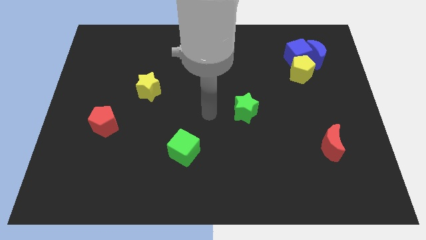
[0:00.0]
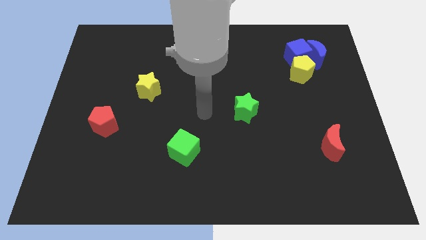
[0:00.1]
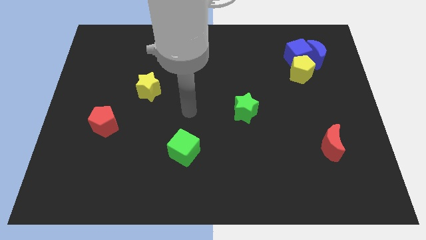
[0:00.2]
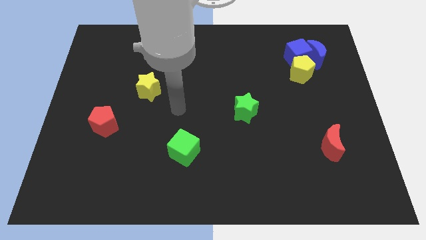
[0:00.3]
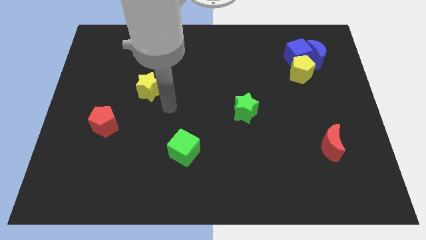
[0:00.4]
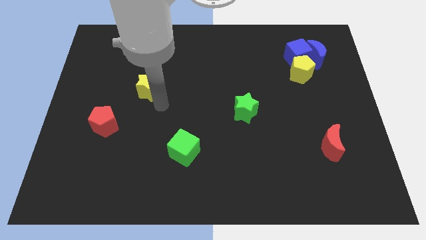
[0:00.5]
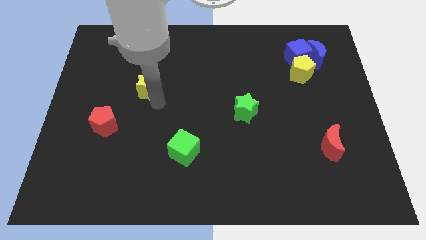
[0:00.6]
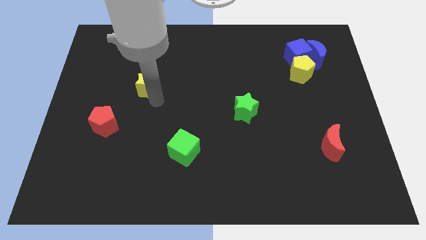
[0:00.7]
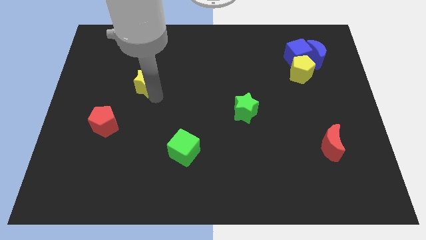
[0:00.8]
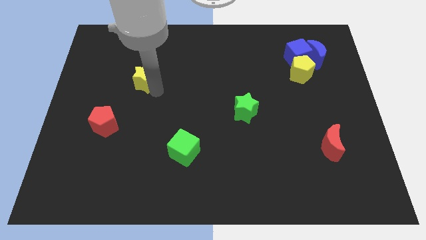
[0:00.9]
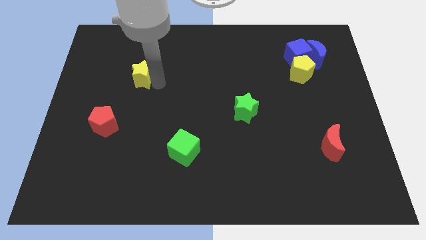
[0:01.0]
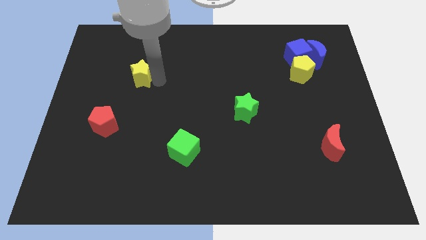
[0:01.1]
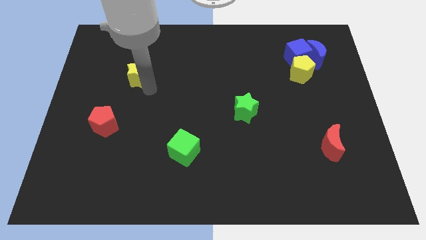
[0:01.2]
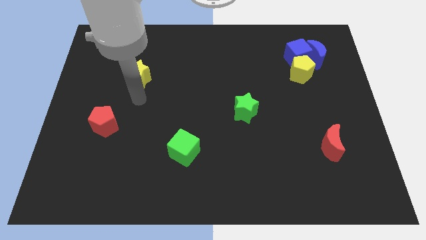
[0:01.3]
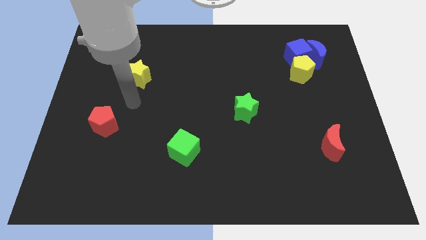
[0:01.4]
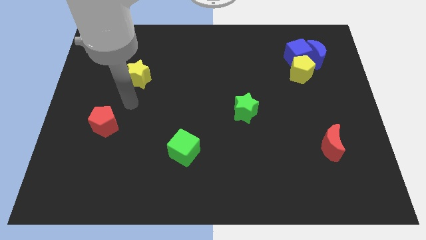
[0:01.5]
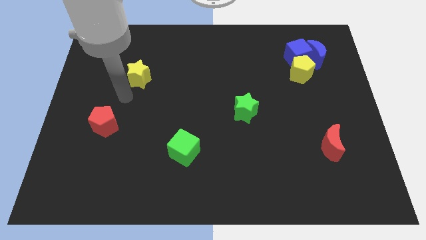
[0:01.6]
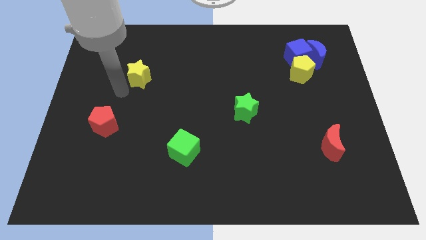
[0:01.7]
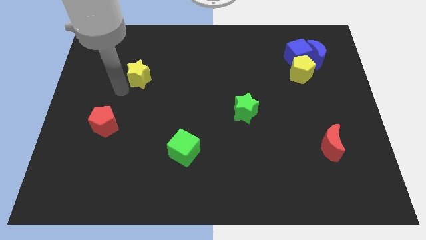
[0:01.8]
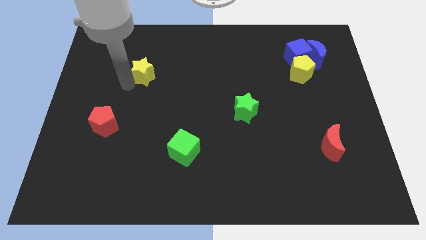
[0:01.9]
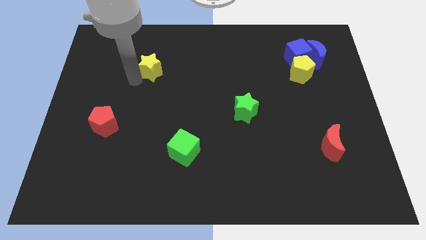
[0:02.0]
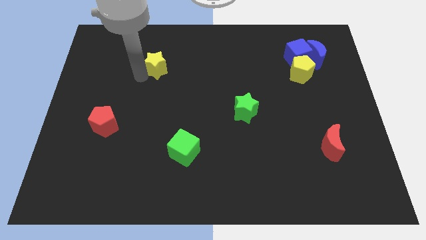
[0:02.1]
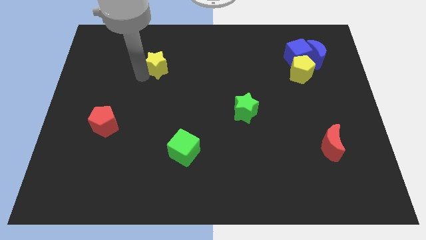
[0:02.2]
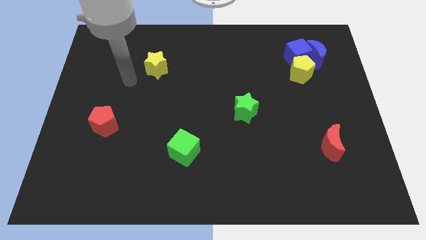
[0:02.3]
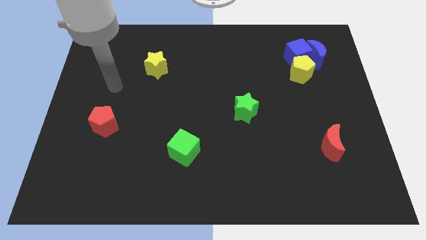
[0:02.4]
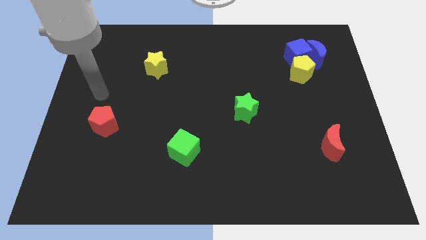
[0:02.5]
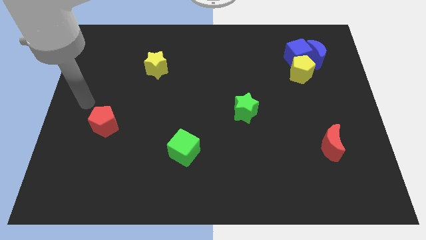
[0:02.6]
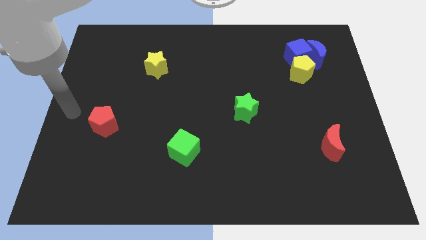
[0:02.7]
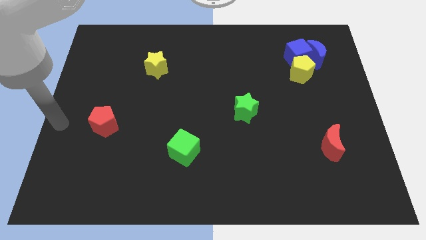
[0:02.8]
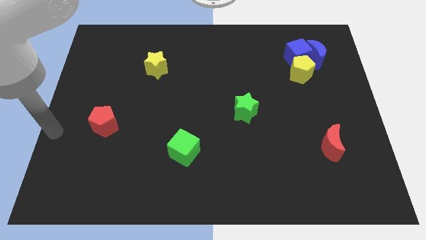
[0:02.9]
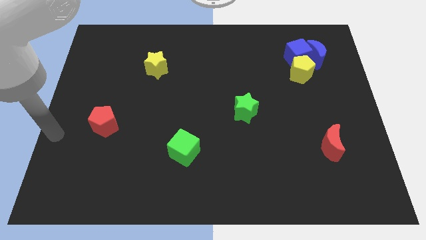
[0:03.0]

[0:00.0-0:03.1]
push the yellow star to the top of the green cube

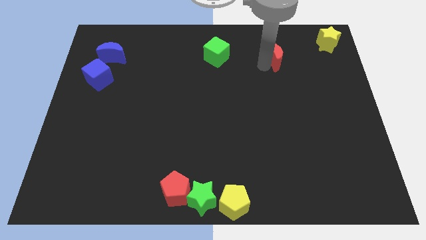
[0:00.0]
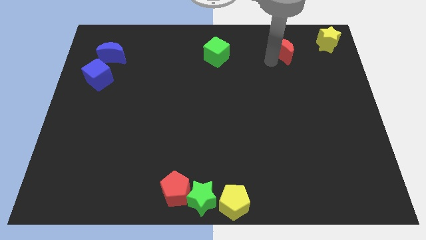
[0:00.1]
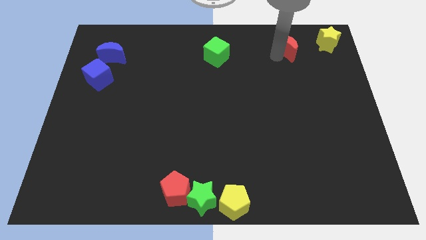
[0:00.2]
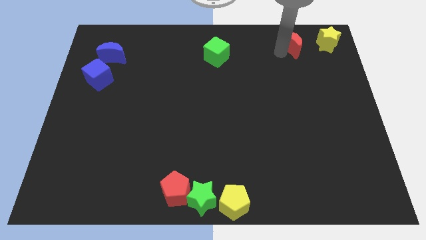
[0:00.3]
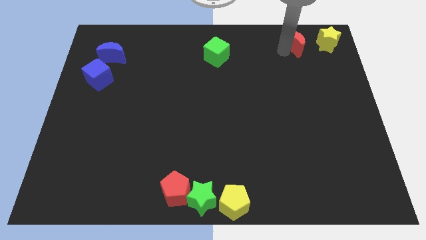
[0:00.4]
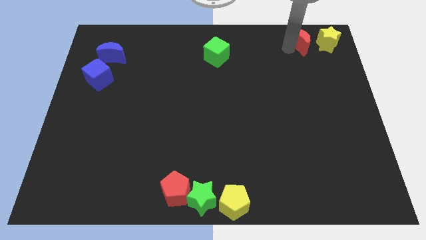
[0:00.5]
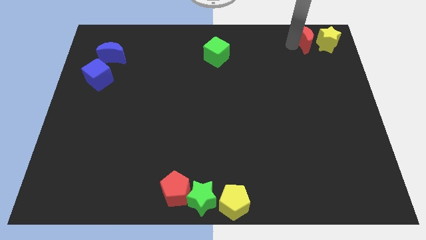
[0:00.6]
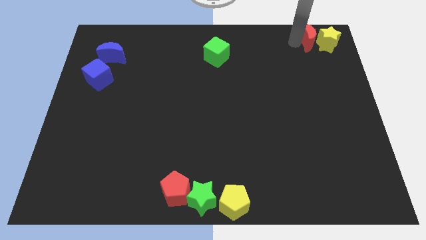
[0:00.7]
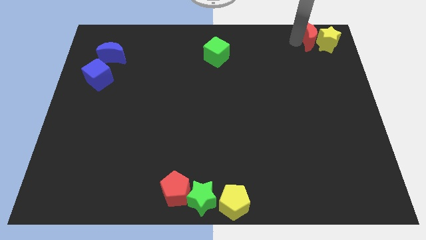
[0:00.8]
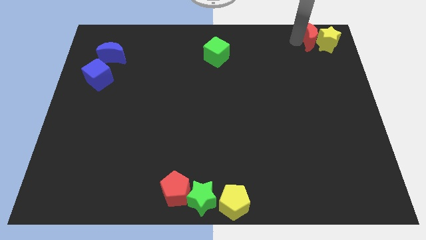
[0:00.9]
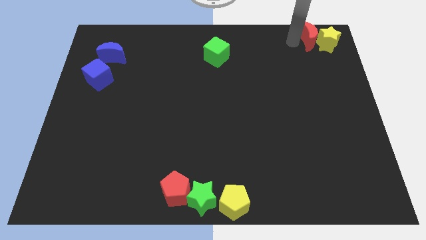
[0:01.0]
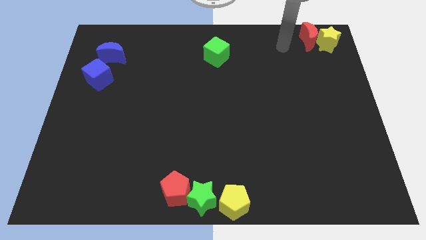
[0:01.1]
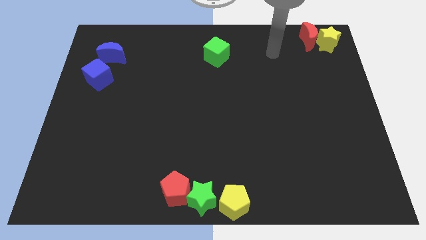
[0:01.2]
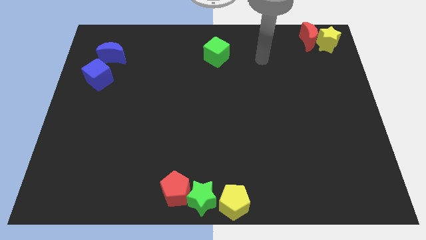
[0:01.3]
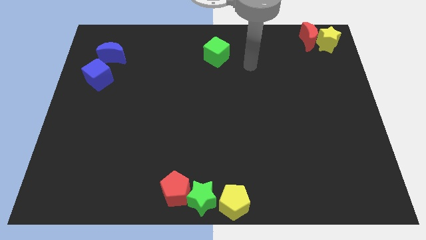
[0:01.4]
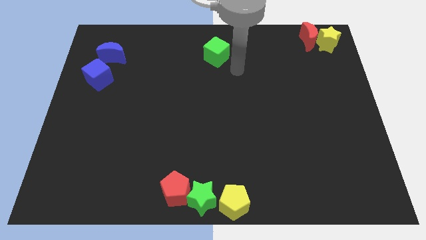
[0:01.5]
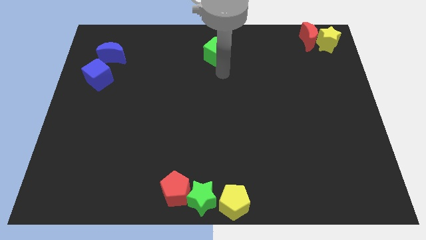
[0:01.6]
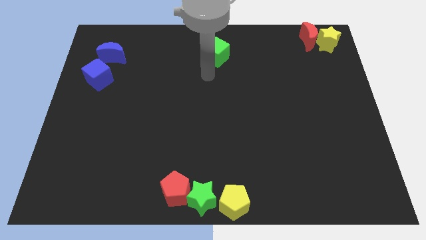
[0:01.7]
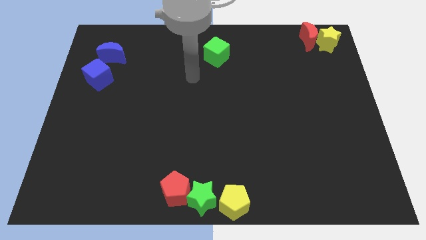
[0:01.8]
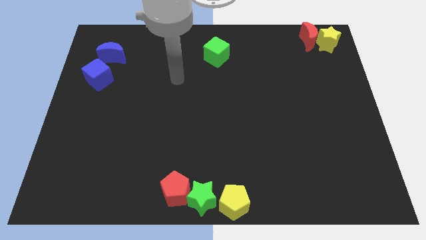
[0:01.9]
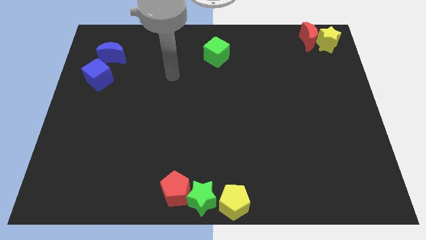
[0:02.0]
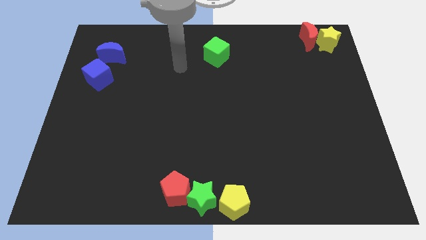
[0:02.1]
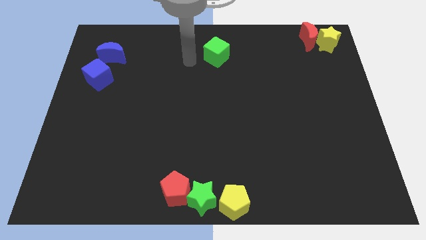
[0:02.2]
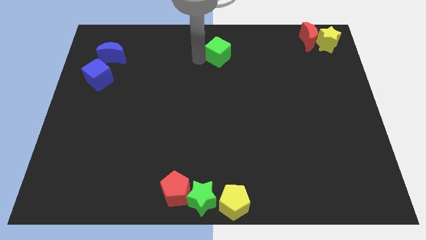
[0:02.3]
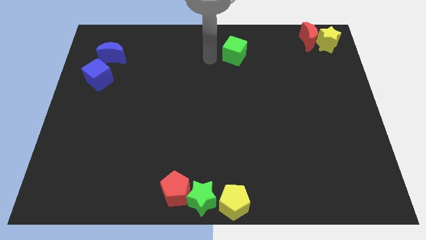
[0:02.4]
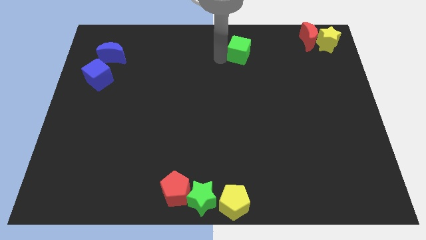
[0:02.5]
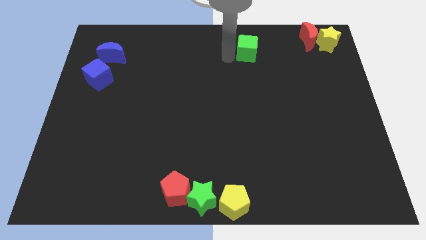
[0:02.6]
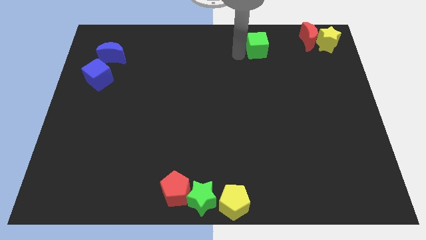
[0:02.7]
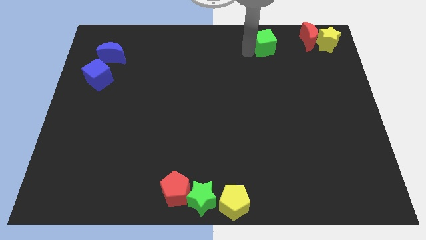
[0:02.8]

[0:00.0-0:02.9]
move the red moon close to the yellow star

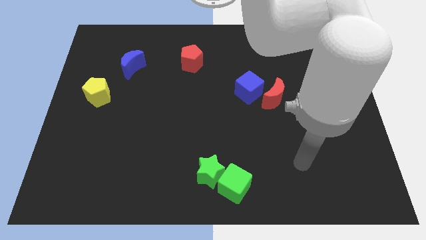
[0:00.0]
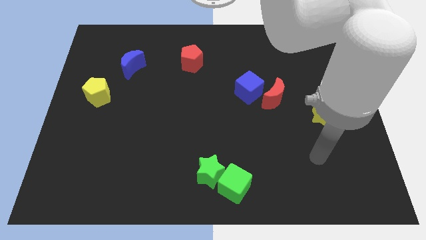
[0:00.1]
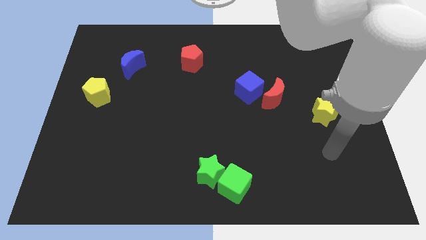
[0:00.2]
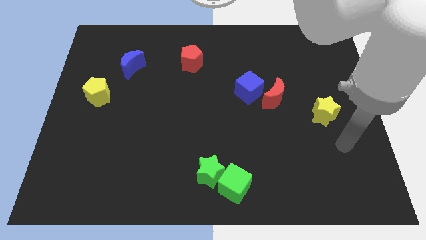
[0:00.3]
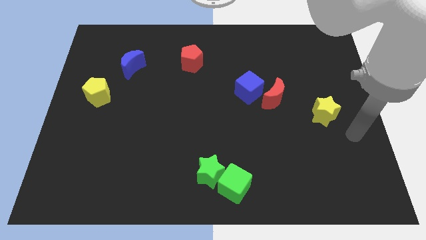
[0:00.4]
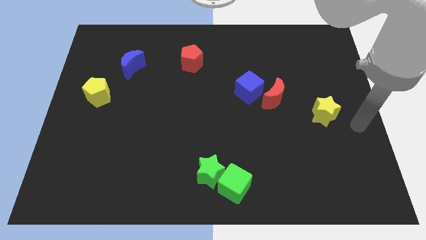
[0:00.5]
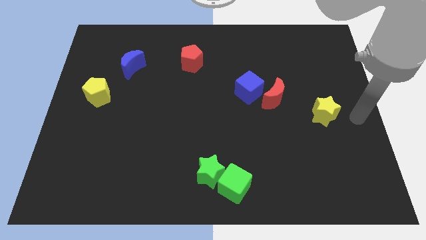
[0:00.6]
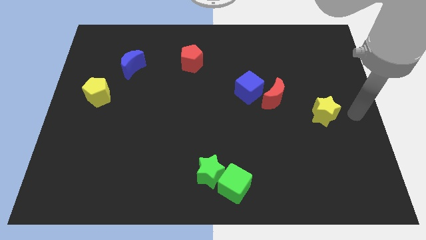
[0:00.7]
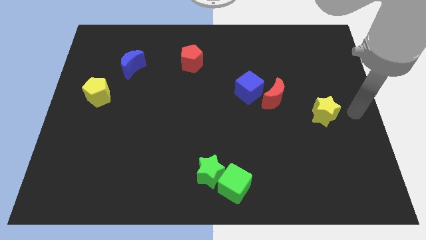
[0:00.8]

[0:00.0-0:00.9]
move the arm right to the yellow star

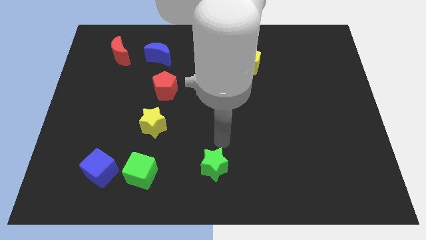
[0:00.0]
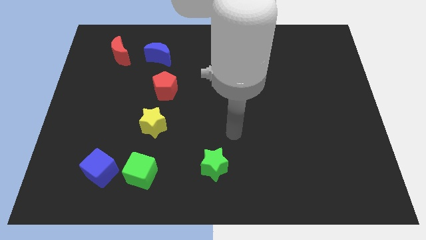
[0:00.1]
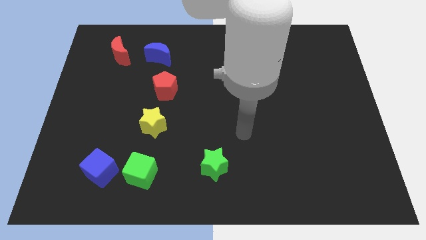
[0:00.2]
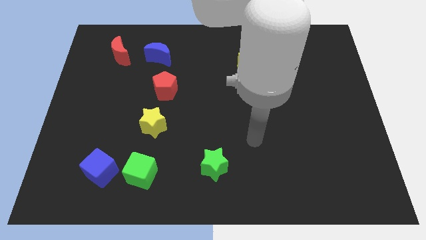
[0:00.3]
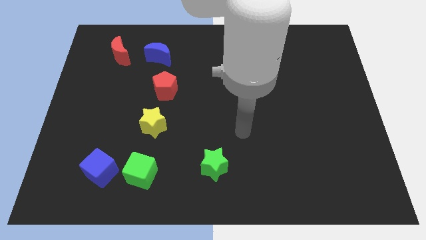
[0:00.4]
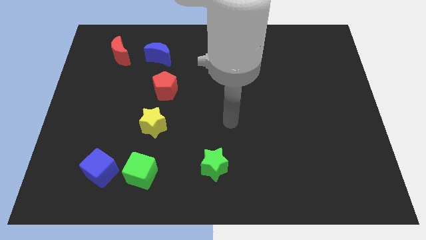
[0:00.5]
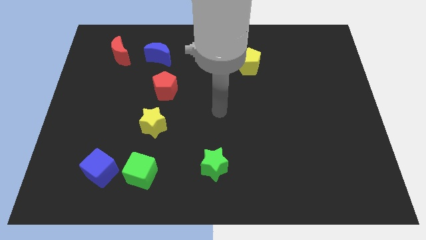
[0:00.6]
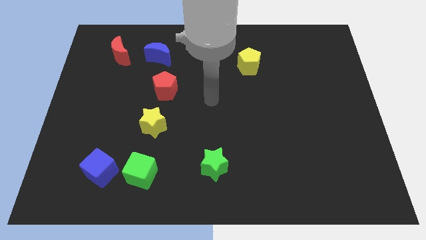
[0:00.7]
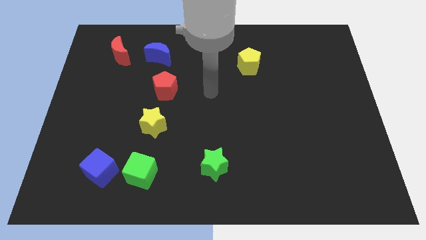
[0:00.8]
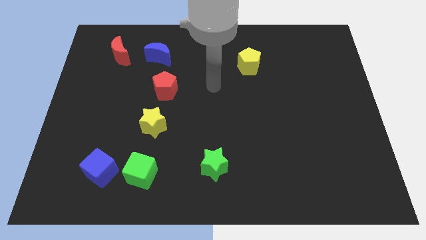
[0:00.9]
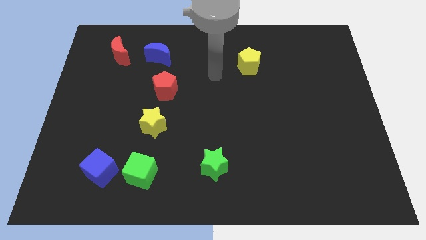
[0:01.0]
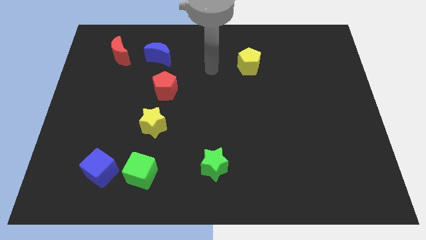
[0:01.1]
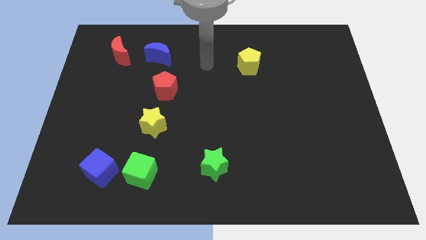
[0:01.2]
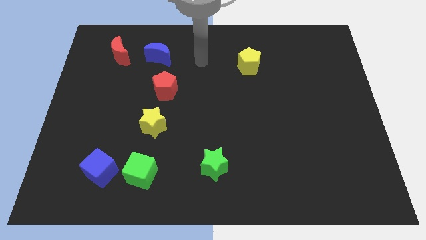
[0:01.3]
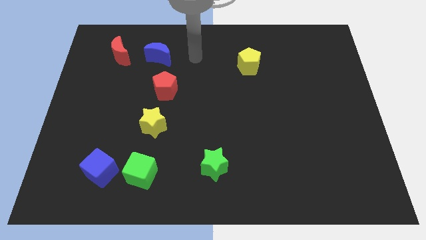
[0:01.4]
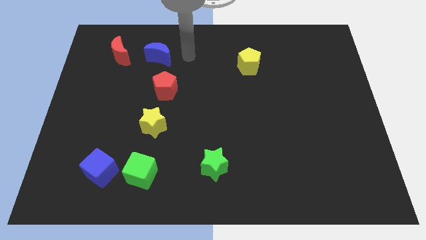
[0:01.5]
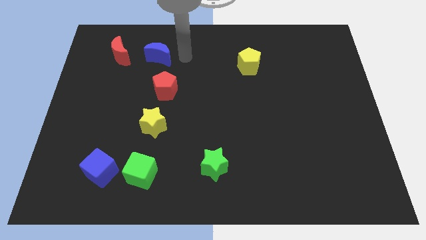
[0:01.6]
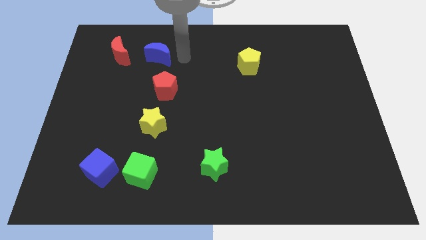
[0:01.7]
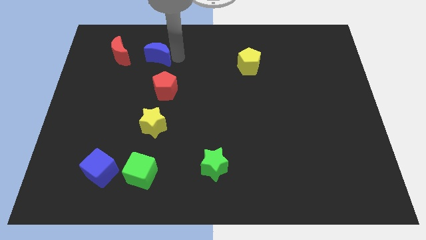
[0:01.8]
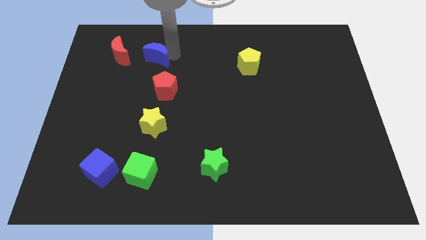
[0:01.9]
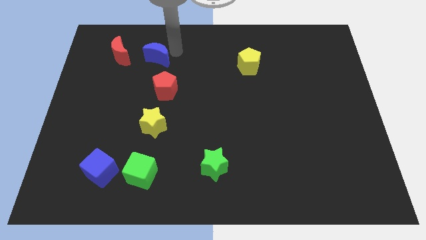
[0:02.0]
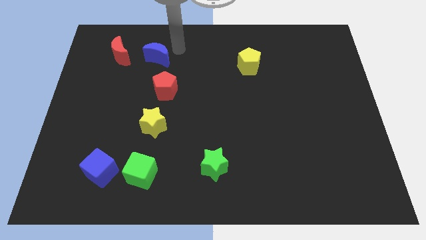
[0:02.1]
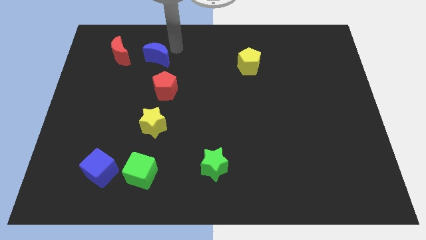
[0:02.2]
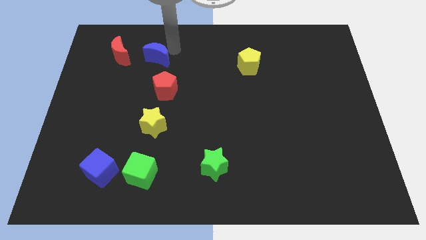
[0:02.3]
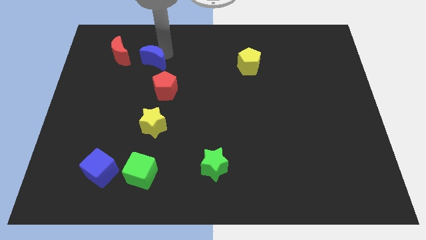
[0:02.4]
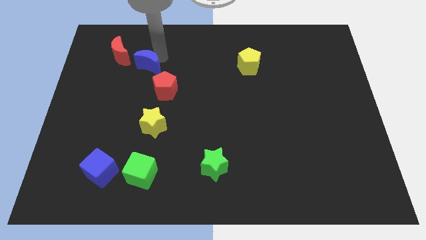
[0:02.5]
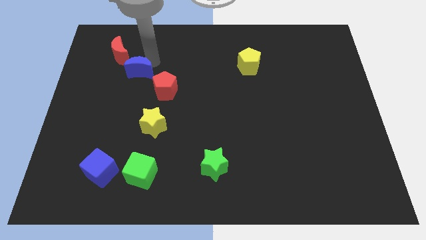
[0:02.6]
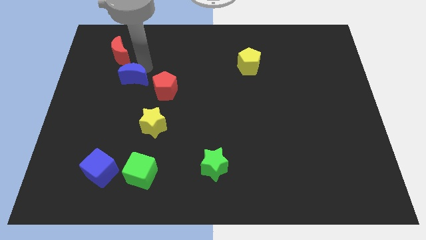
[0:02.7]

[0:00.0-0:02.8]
put the blue crescent in between the red crescent and red pentagon
